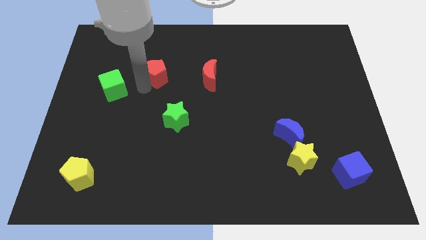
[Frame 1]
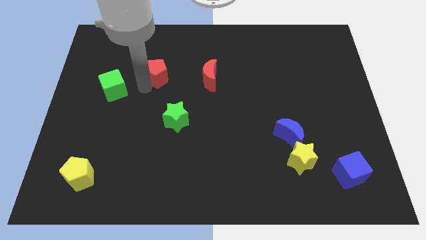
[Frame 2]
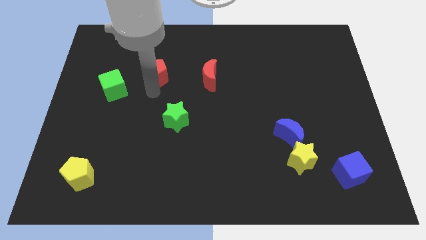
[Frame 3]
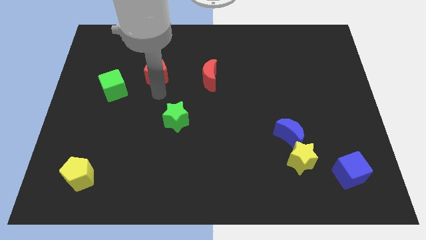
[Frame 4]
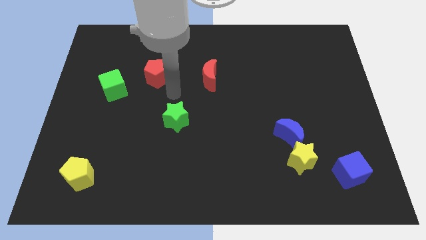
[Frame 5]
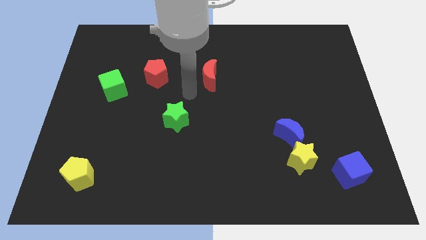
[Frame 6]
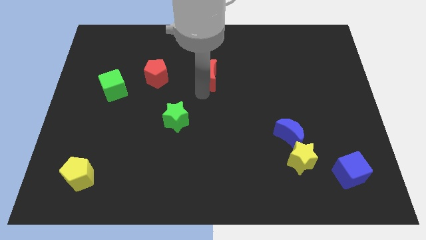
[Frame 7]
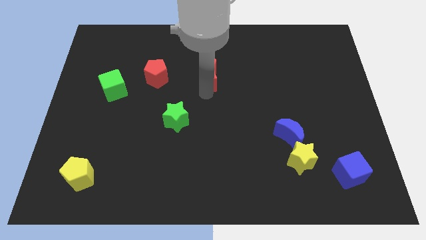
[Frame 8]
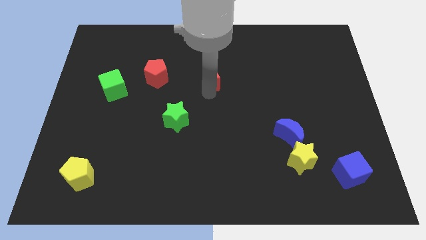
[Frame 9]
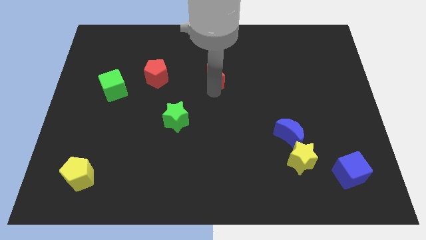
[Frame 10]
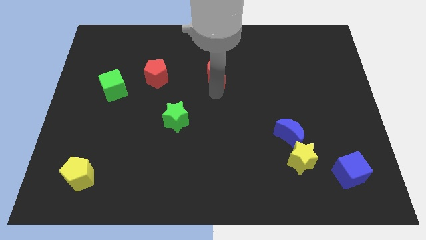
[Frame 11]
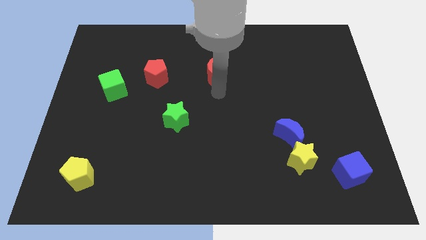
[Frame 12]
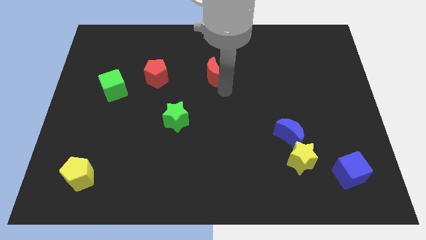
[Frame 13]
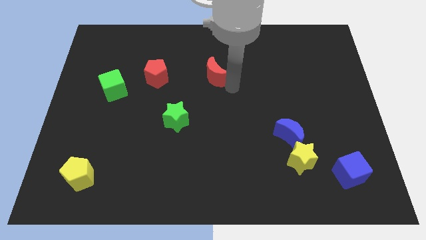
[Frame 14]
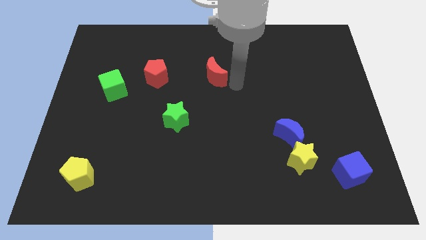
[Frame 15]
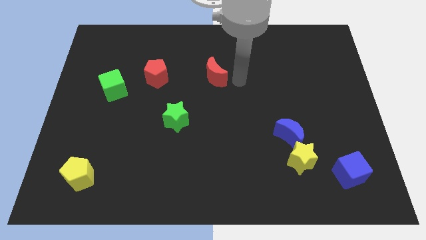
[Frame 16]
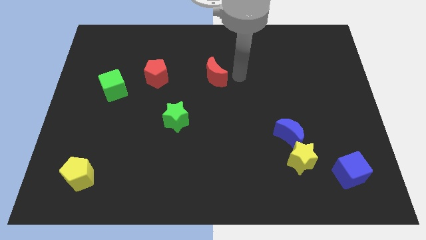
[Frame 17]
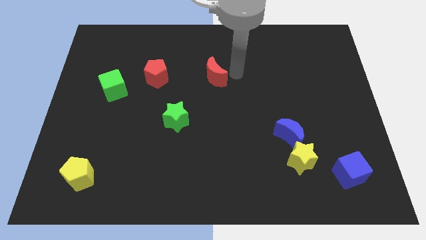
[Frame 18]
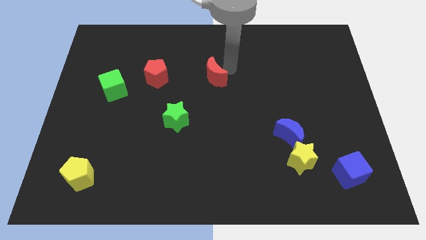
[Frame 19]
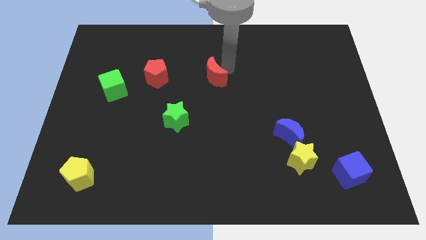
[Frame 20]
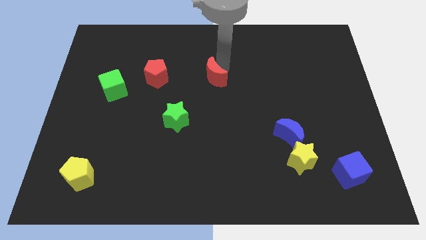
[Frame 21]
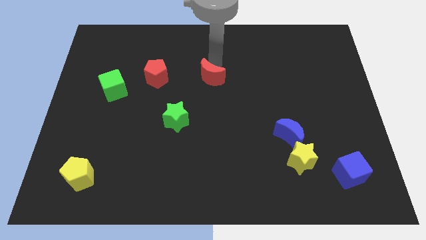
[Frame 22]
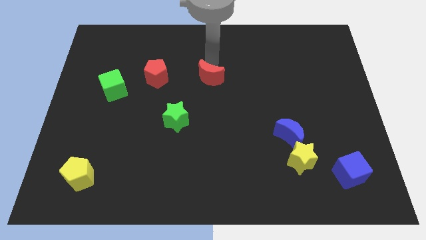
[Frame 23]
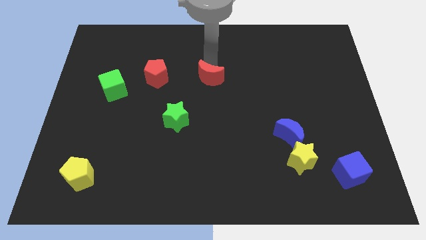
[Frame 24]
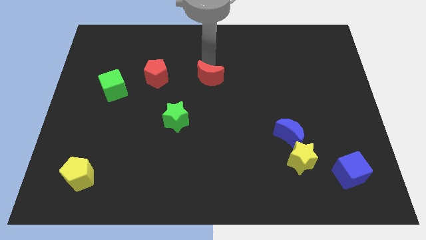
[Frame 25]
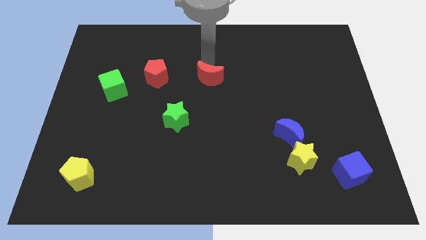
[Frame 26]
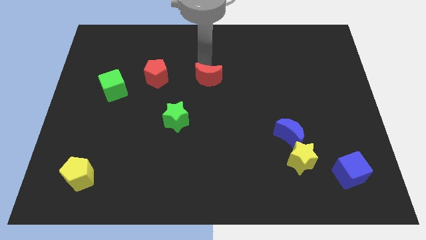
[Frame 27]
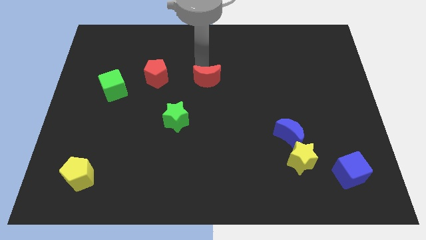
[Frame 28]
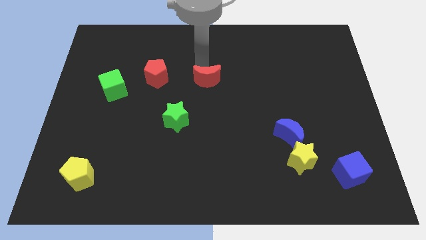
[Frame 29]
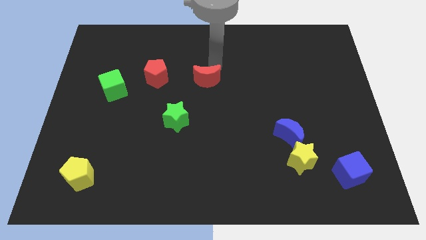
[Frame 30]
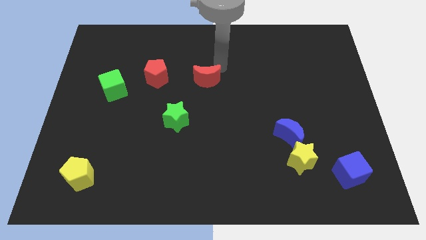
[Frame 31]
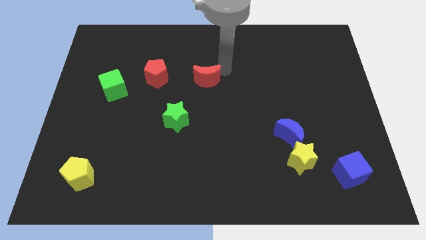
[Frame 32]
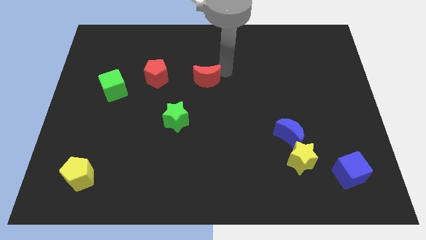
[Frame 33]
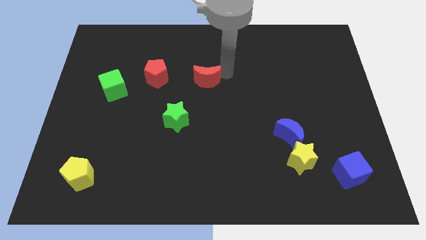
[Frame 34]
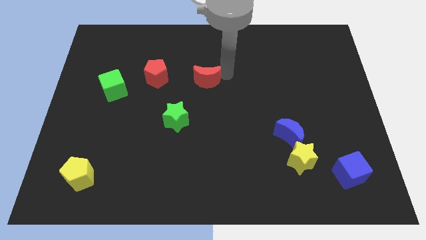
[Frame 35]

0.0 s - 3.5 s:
move the red crescent towards the red pentagon

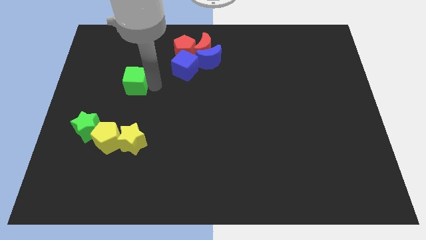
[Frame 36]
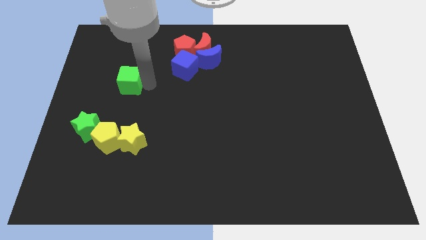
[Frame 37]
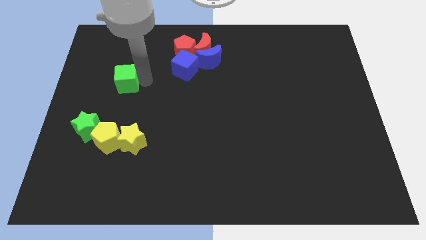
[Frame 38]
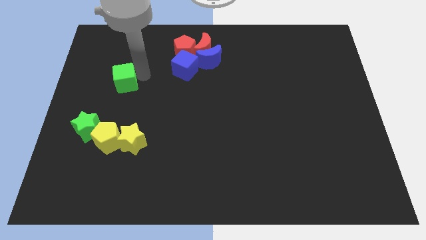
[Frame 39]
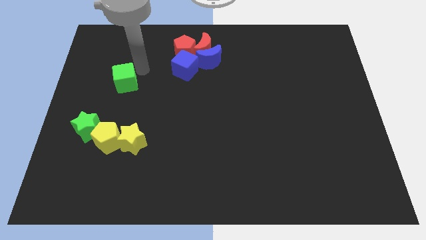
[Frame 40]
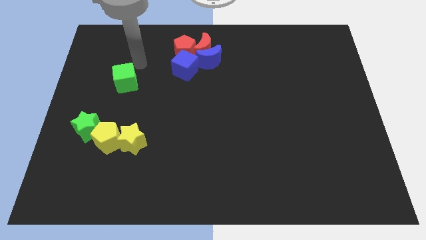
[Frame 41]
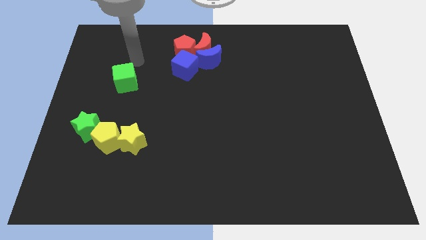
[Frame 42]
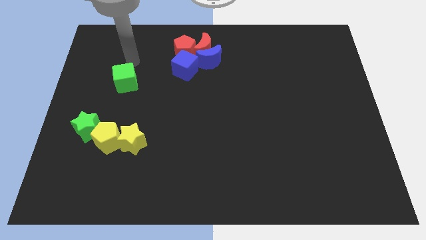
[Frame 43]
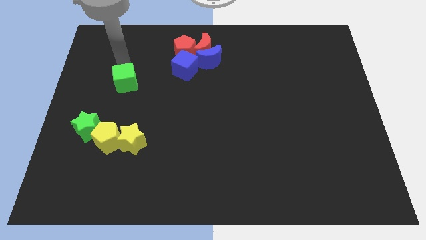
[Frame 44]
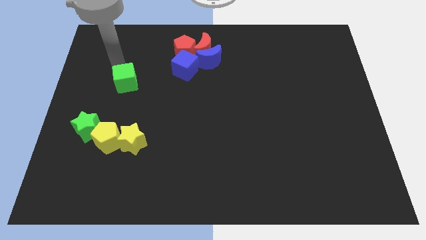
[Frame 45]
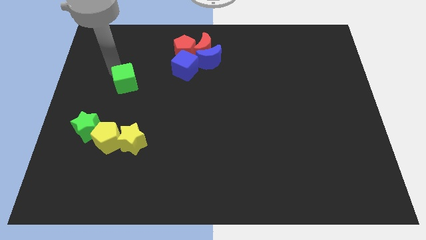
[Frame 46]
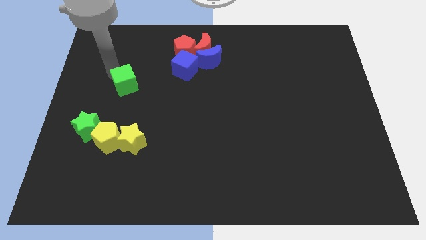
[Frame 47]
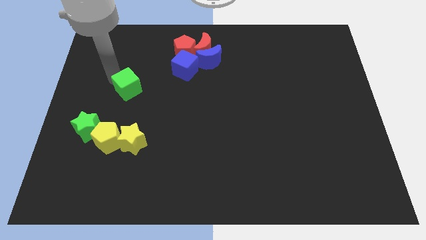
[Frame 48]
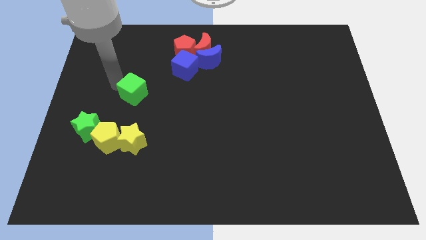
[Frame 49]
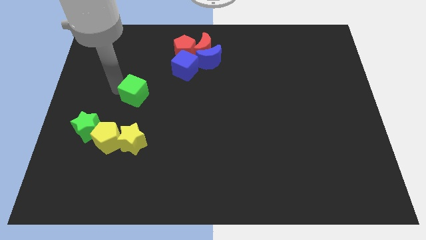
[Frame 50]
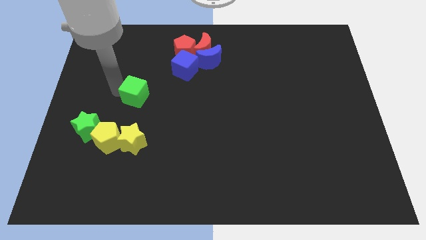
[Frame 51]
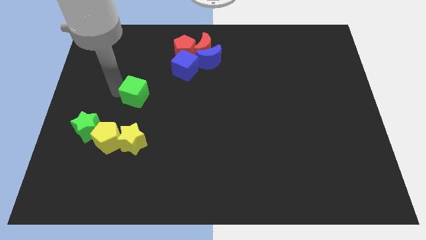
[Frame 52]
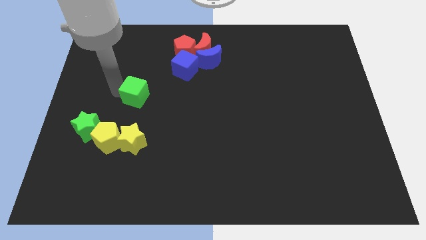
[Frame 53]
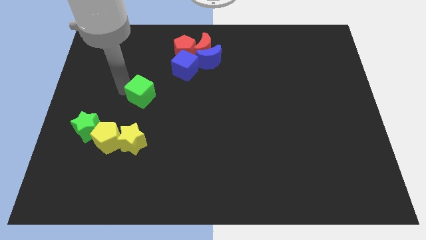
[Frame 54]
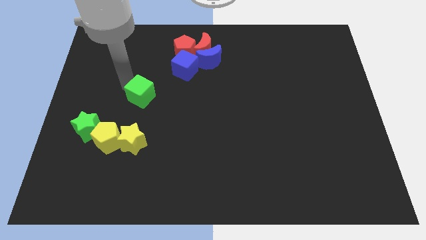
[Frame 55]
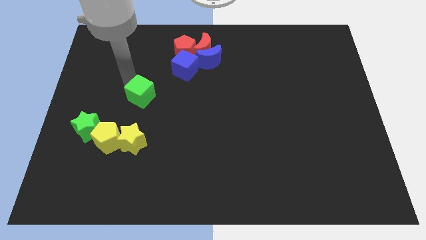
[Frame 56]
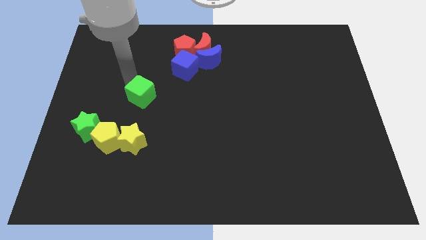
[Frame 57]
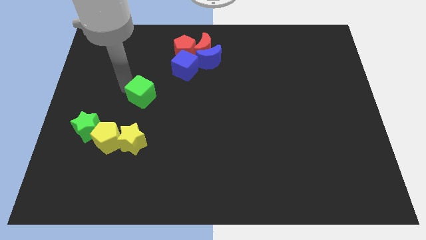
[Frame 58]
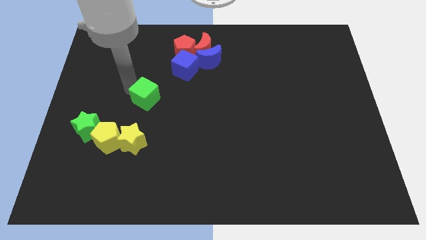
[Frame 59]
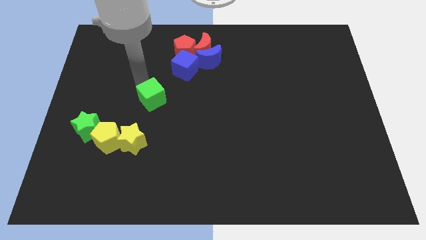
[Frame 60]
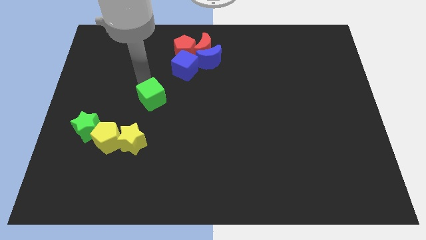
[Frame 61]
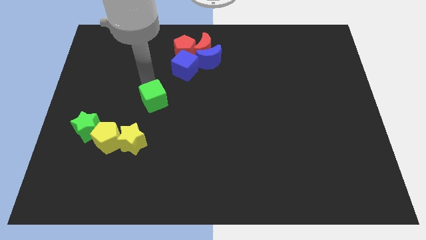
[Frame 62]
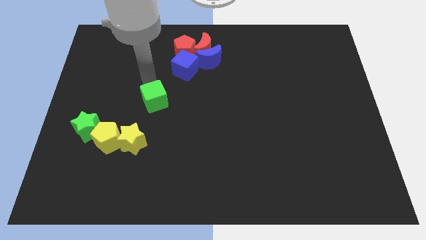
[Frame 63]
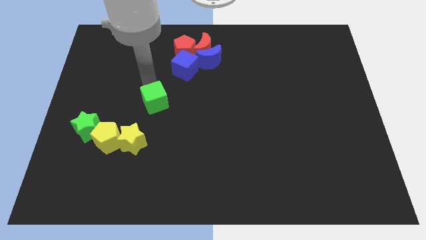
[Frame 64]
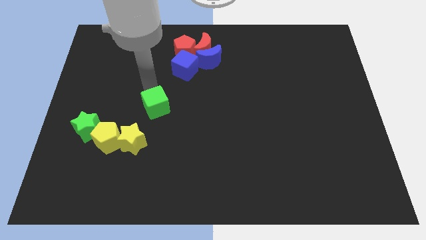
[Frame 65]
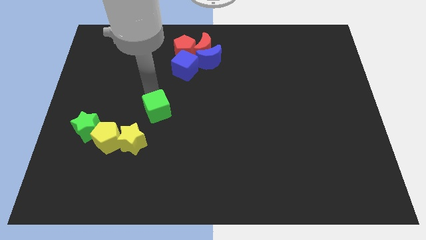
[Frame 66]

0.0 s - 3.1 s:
put the green cube between the blue cube and yellow star

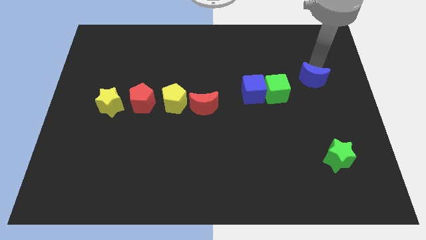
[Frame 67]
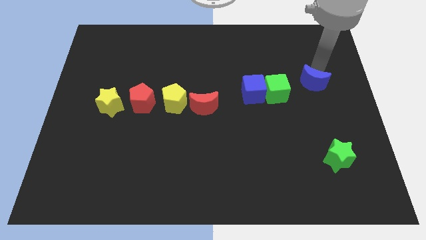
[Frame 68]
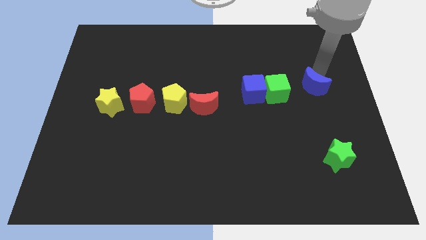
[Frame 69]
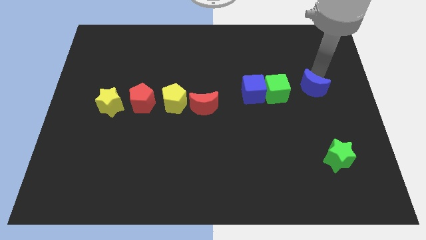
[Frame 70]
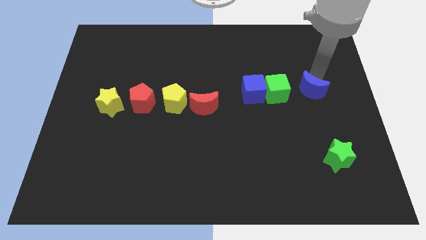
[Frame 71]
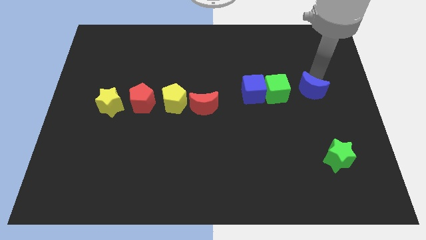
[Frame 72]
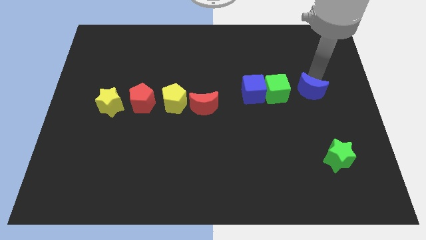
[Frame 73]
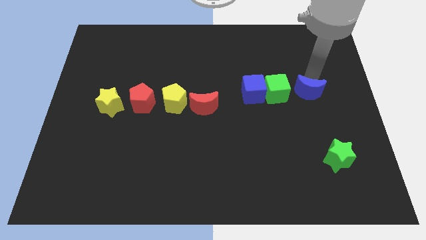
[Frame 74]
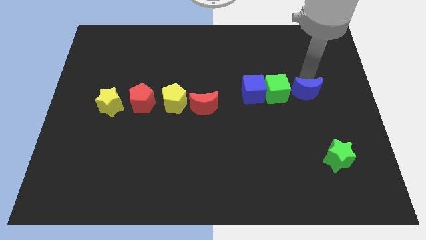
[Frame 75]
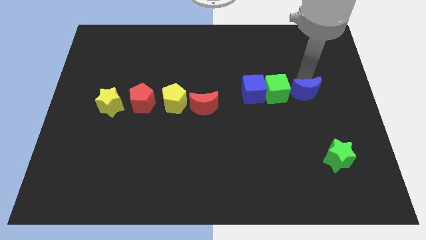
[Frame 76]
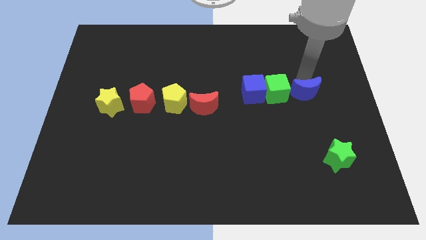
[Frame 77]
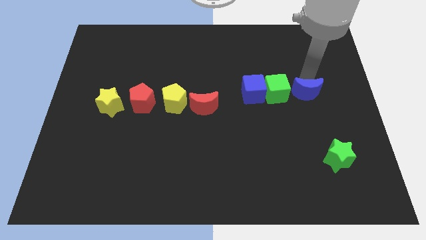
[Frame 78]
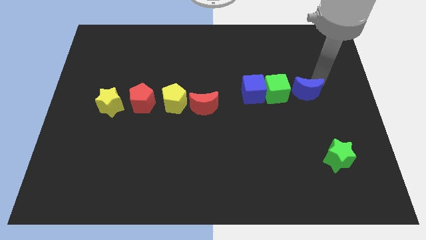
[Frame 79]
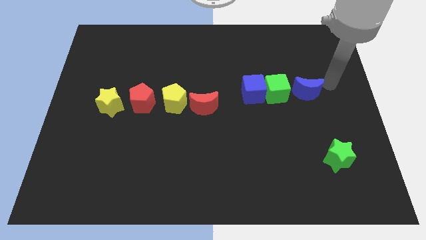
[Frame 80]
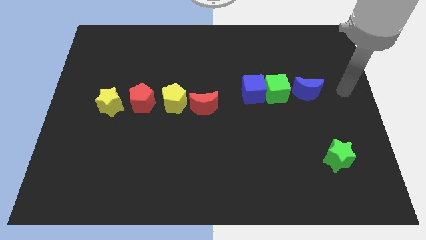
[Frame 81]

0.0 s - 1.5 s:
place the blue crescent right of green cube

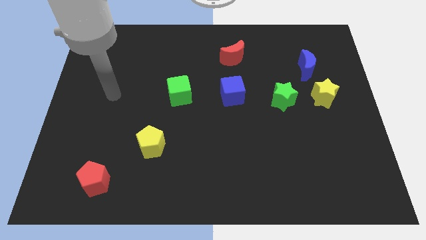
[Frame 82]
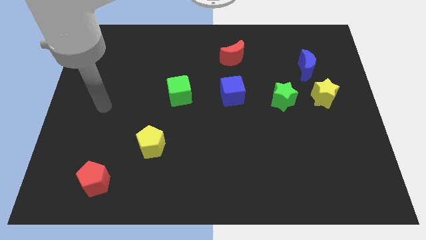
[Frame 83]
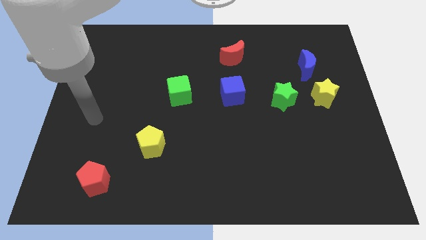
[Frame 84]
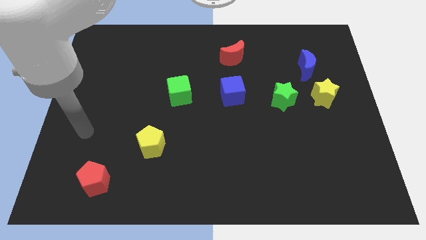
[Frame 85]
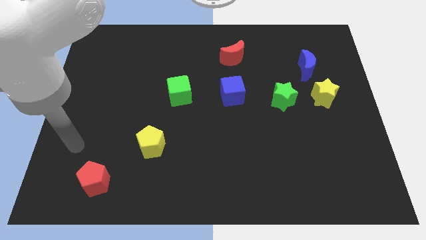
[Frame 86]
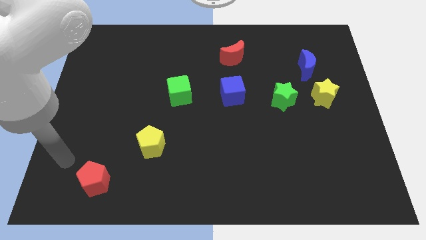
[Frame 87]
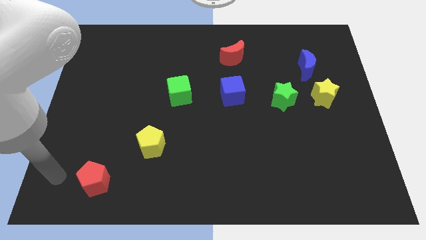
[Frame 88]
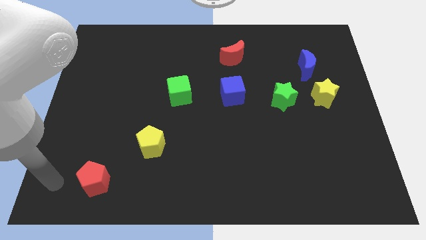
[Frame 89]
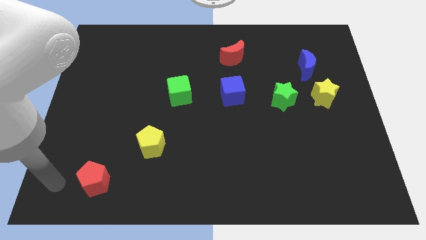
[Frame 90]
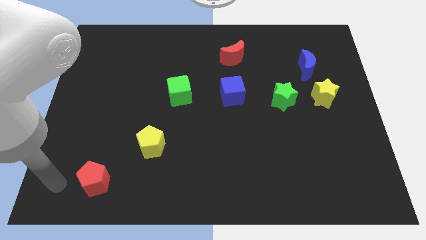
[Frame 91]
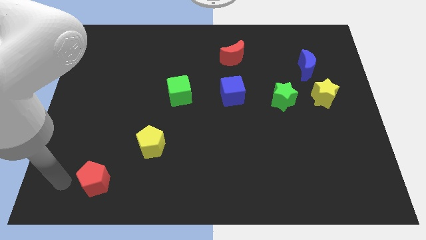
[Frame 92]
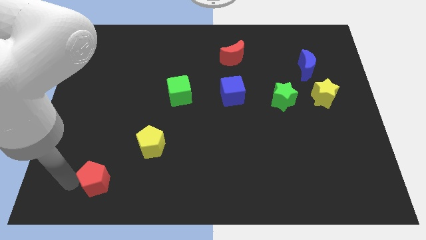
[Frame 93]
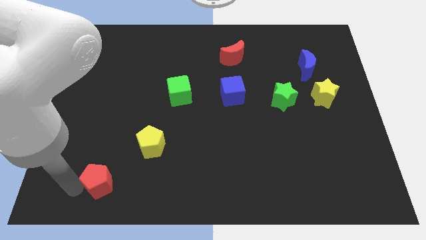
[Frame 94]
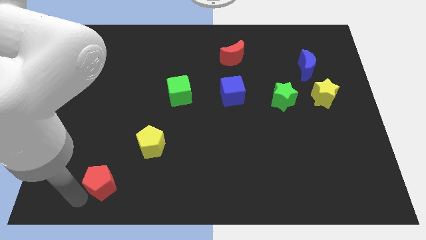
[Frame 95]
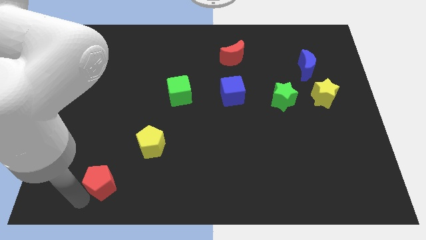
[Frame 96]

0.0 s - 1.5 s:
move the arm to the red pentagon
